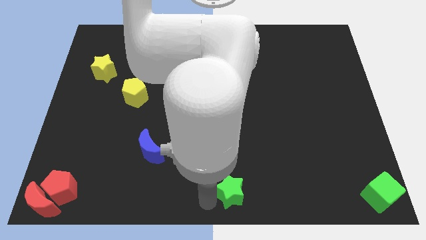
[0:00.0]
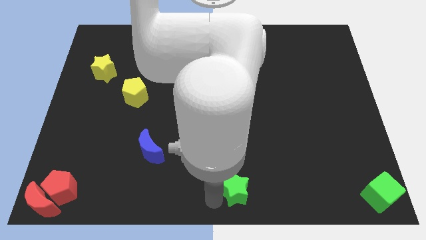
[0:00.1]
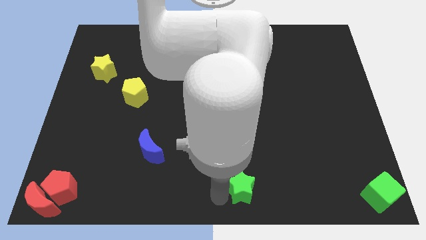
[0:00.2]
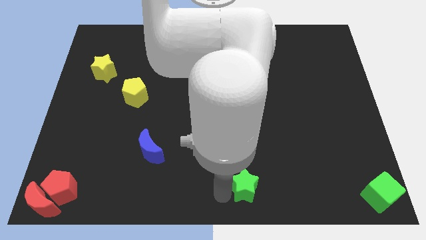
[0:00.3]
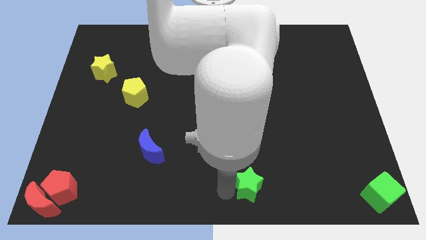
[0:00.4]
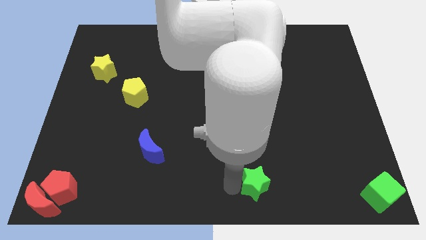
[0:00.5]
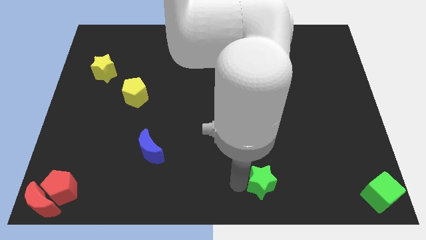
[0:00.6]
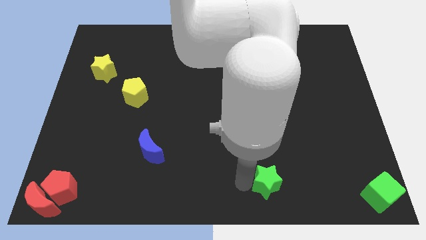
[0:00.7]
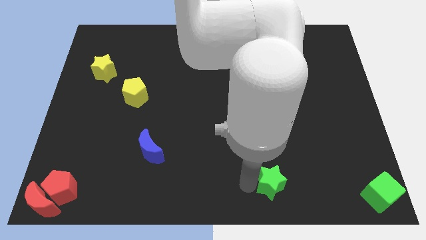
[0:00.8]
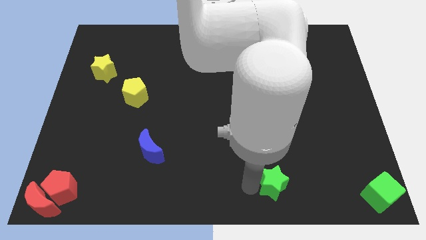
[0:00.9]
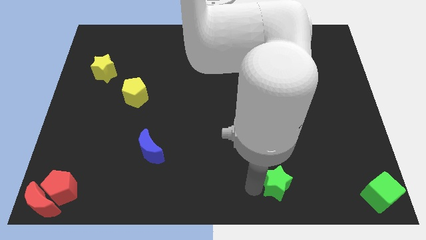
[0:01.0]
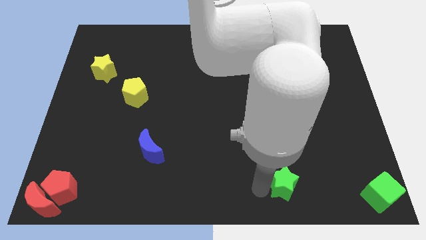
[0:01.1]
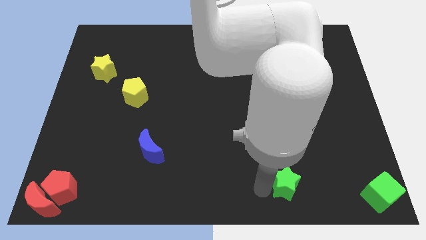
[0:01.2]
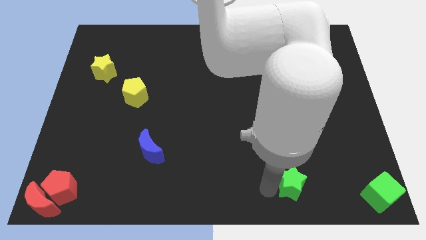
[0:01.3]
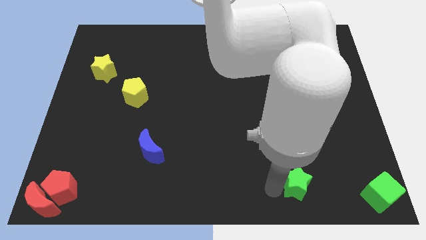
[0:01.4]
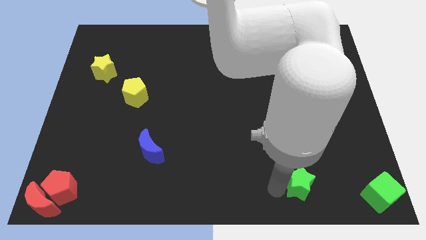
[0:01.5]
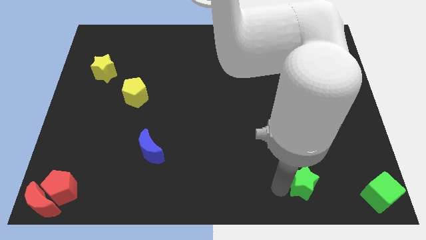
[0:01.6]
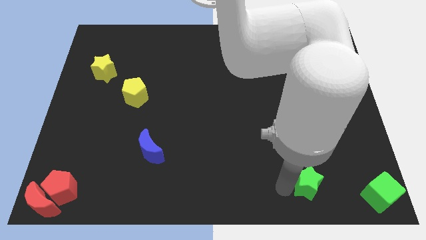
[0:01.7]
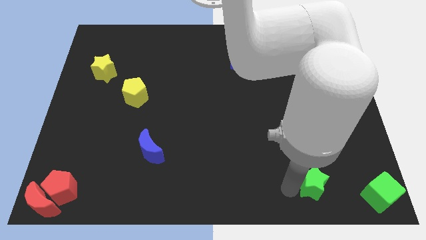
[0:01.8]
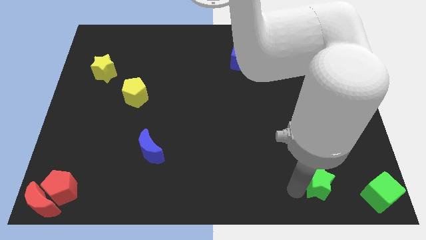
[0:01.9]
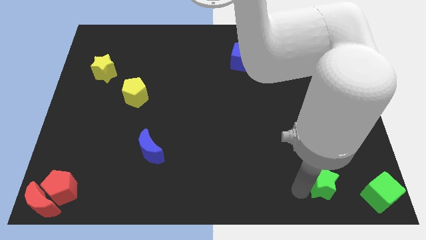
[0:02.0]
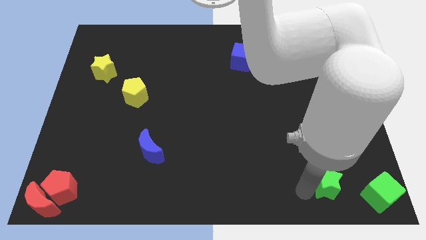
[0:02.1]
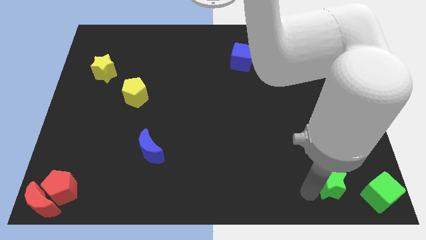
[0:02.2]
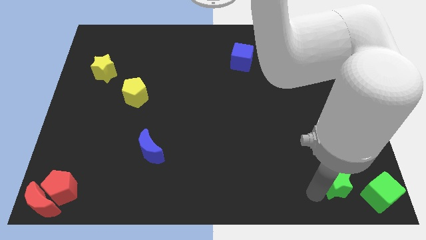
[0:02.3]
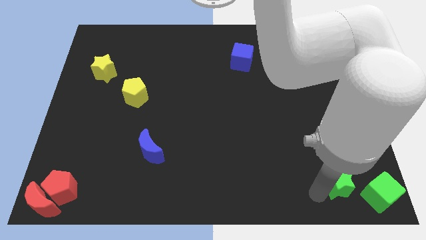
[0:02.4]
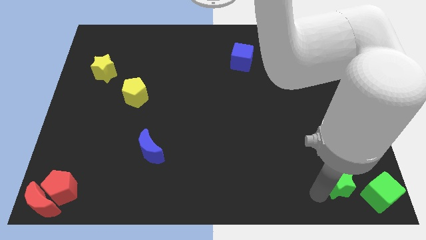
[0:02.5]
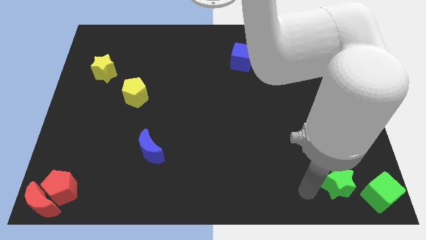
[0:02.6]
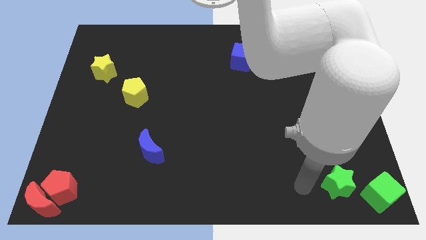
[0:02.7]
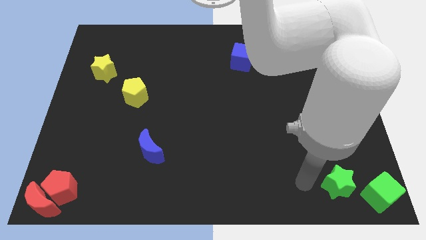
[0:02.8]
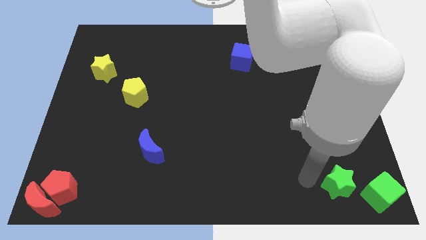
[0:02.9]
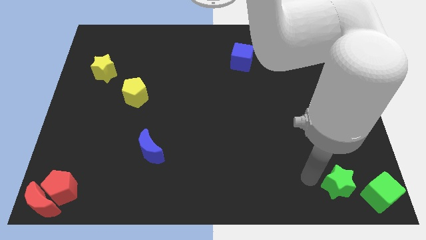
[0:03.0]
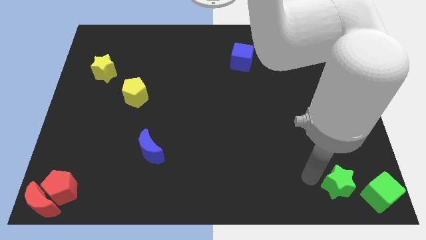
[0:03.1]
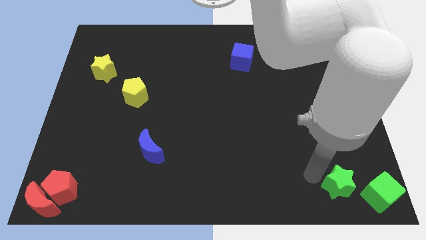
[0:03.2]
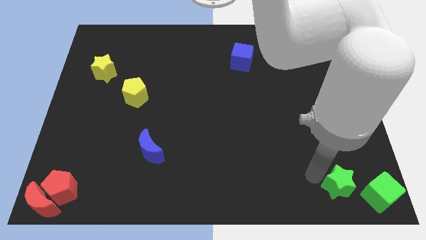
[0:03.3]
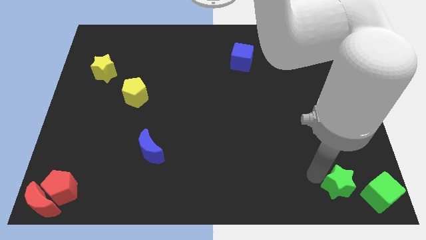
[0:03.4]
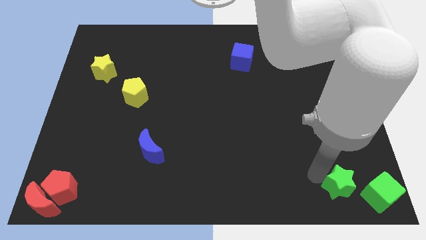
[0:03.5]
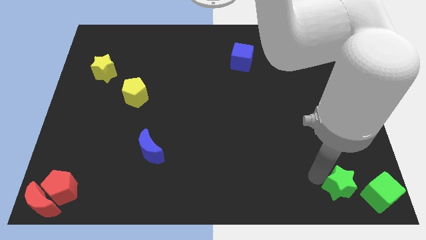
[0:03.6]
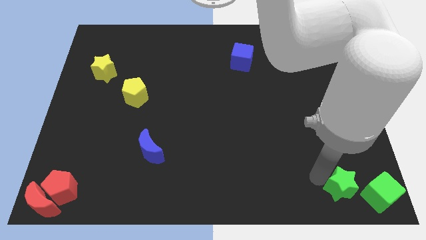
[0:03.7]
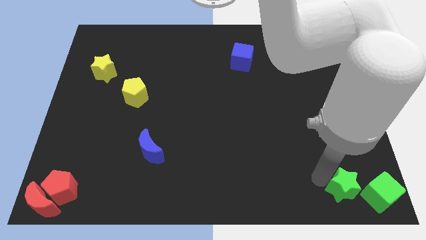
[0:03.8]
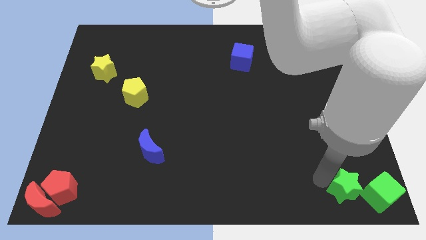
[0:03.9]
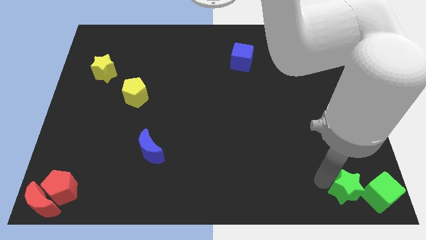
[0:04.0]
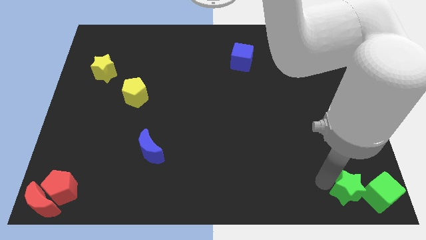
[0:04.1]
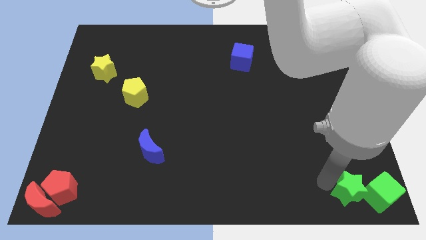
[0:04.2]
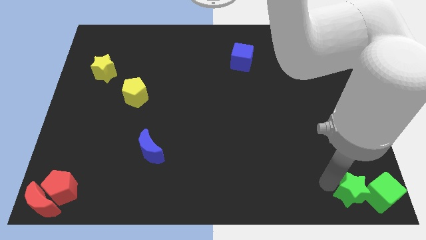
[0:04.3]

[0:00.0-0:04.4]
slide the green star left to the green cube

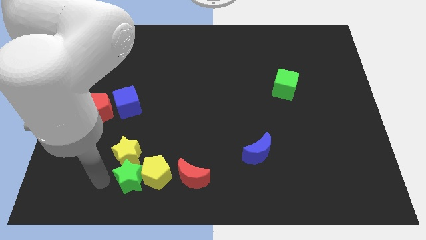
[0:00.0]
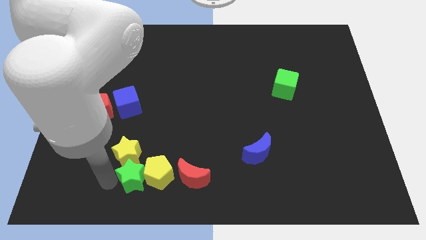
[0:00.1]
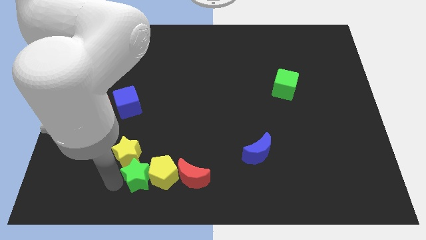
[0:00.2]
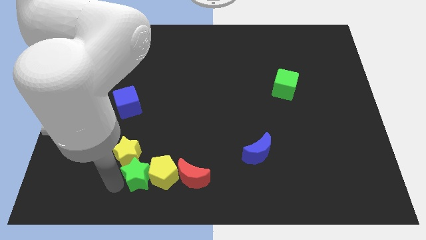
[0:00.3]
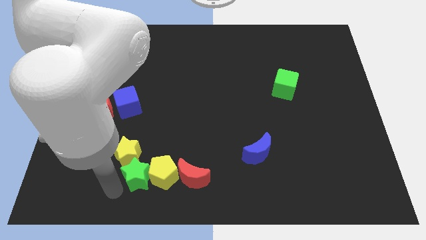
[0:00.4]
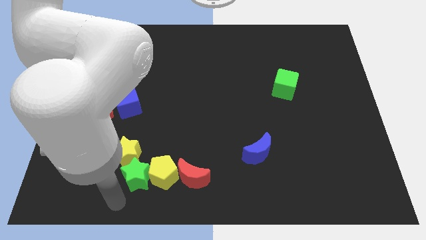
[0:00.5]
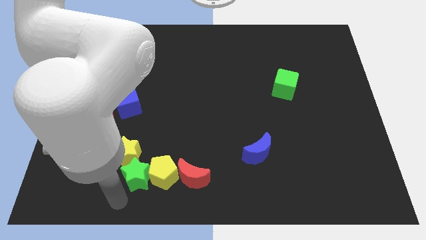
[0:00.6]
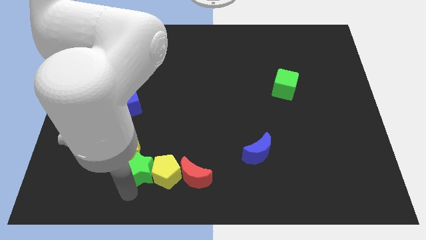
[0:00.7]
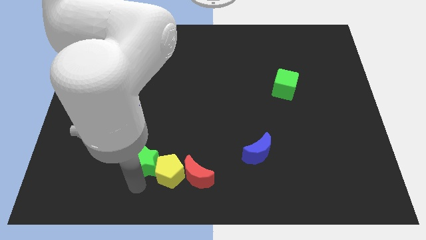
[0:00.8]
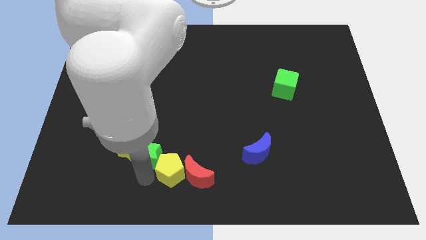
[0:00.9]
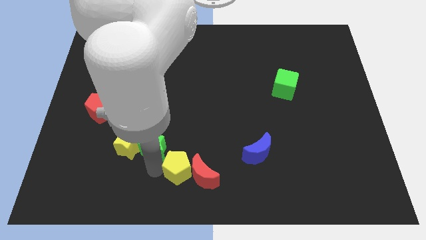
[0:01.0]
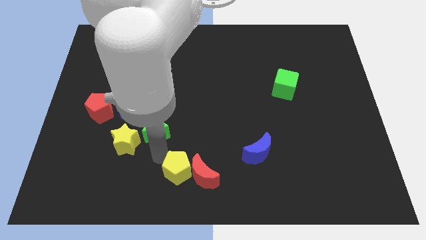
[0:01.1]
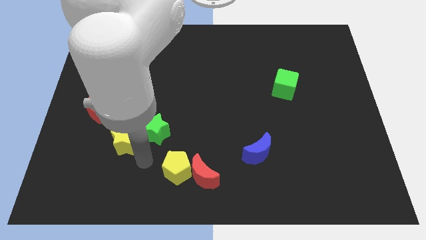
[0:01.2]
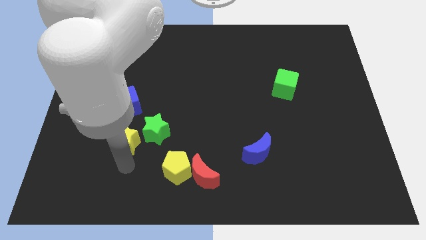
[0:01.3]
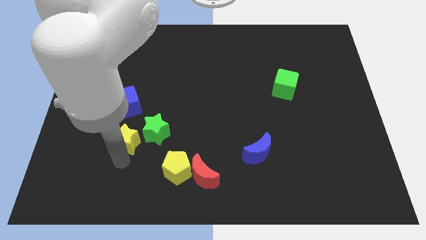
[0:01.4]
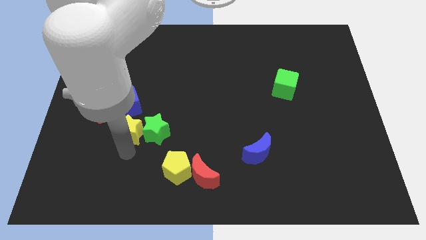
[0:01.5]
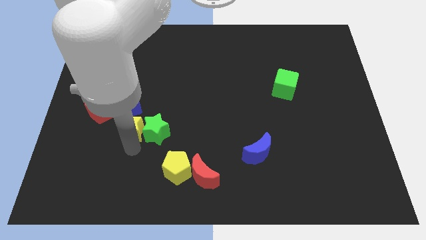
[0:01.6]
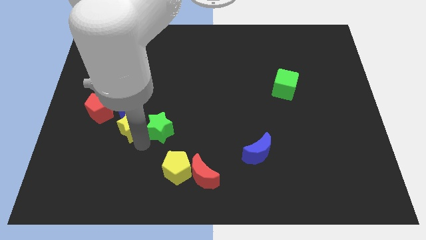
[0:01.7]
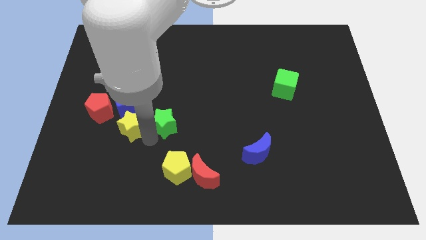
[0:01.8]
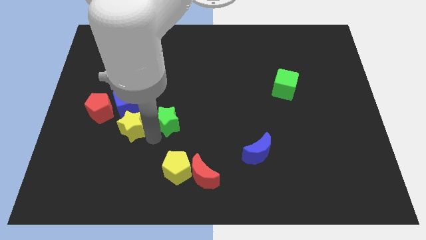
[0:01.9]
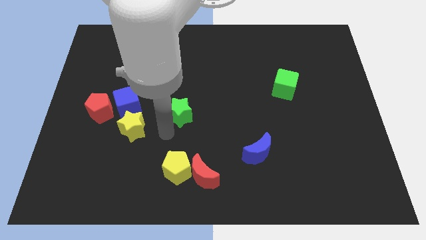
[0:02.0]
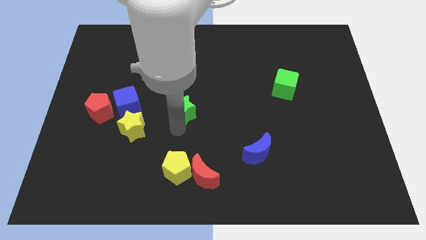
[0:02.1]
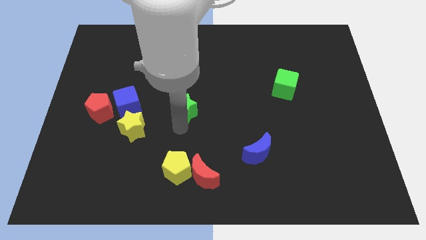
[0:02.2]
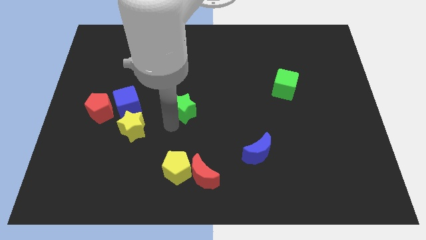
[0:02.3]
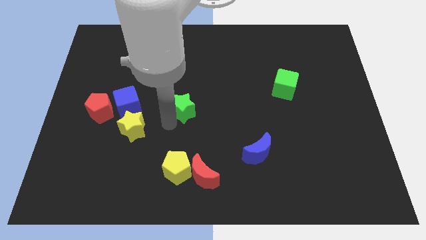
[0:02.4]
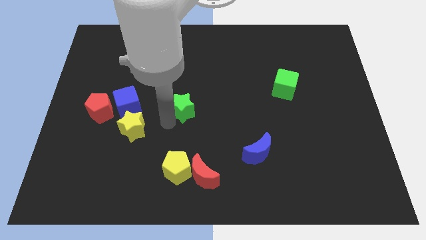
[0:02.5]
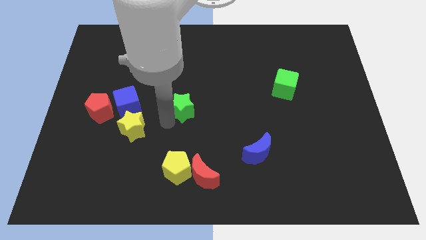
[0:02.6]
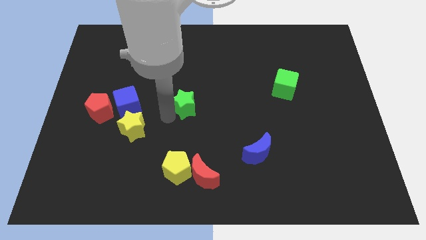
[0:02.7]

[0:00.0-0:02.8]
put the green star vertically above the yellow pentagon

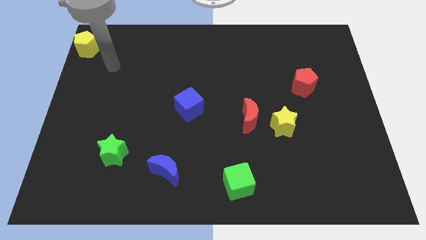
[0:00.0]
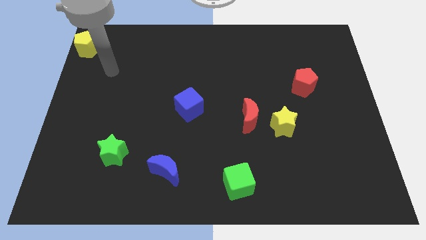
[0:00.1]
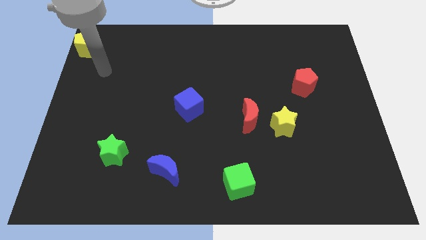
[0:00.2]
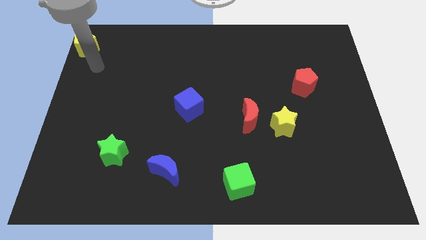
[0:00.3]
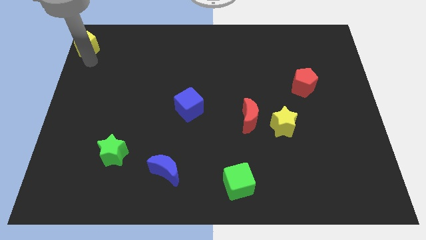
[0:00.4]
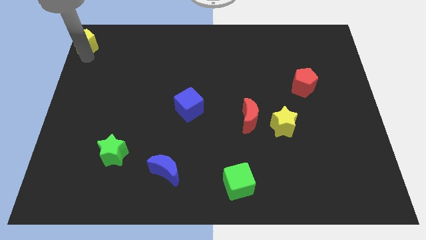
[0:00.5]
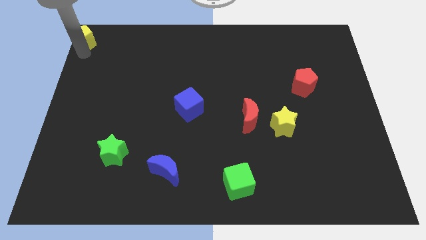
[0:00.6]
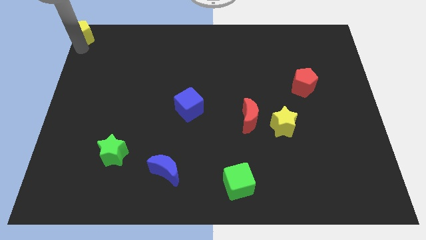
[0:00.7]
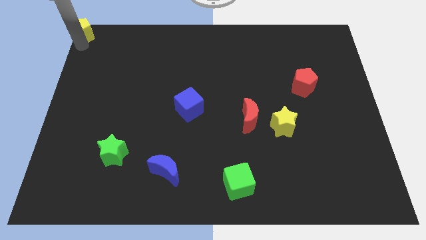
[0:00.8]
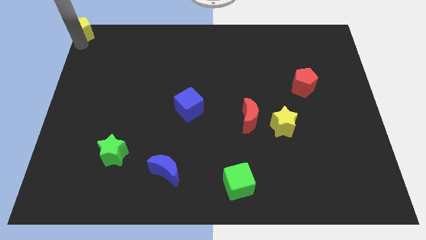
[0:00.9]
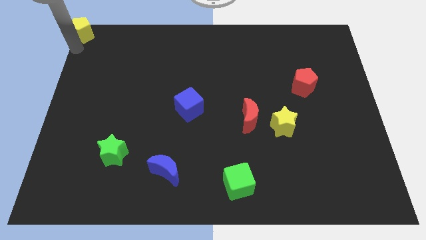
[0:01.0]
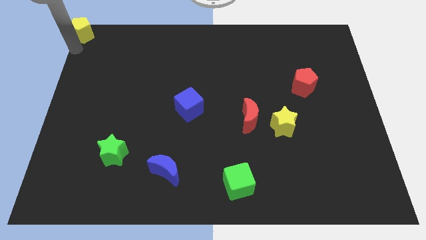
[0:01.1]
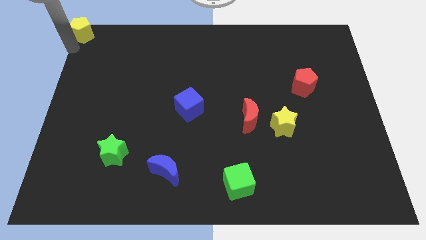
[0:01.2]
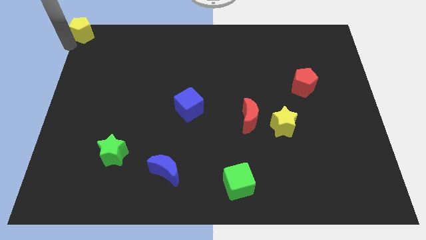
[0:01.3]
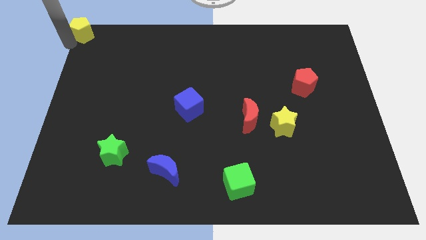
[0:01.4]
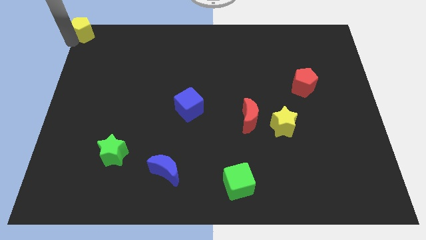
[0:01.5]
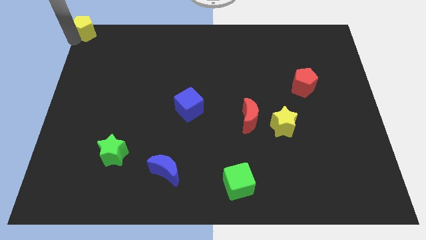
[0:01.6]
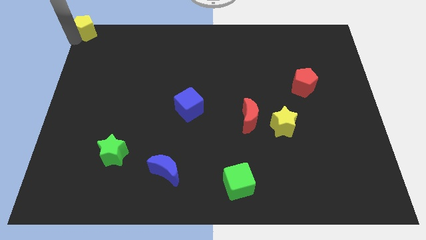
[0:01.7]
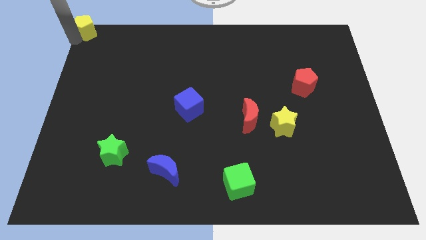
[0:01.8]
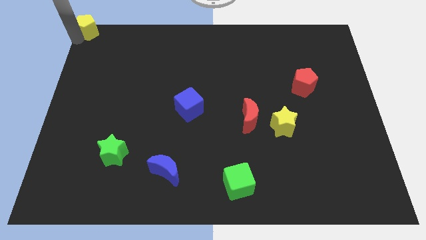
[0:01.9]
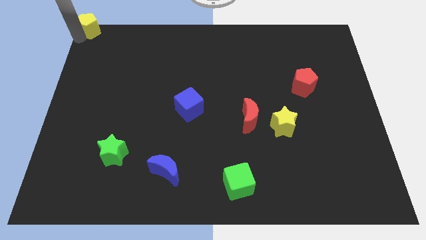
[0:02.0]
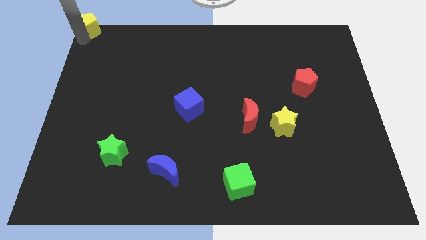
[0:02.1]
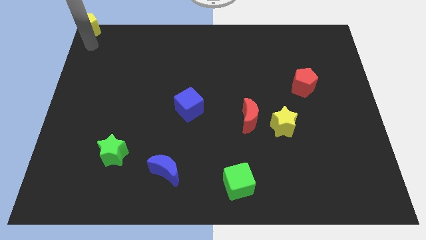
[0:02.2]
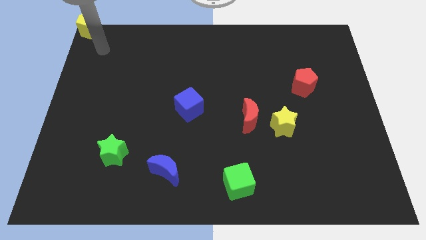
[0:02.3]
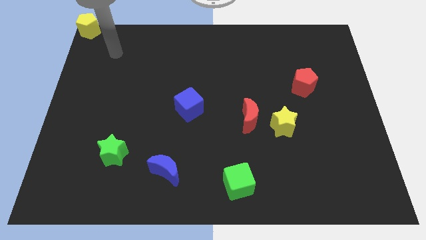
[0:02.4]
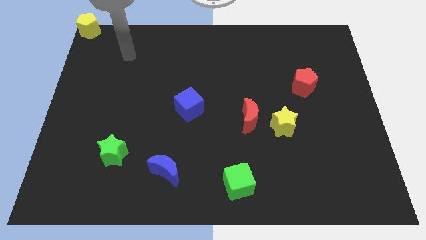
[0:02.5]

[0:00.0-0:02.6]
move the yellow pentagon to the top left corner on the board
